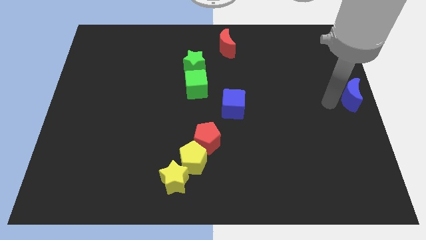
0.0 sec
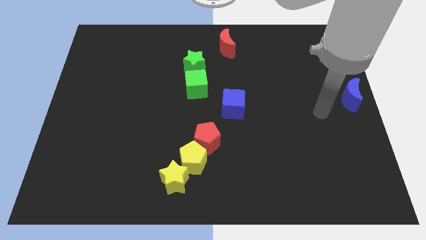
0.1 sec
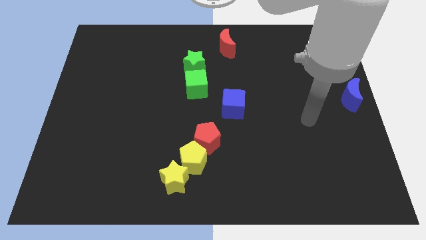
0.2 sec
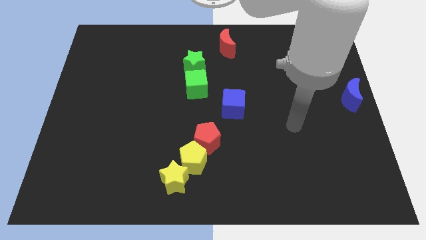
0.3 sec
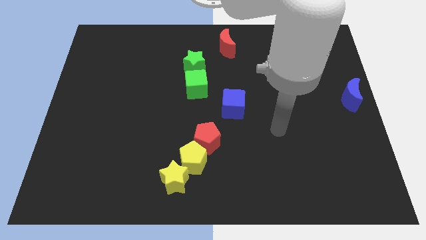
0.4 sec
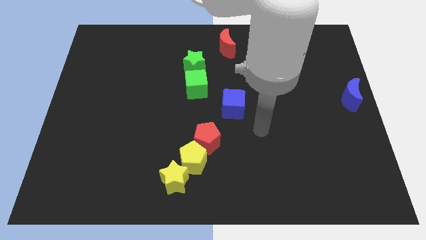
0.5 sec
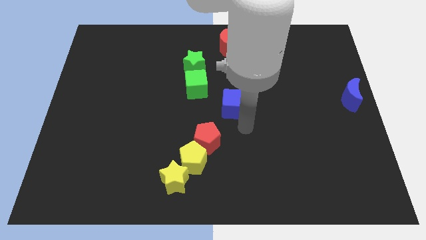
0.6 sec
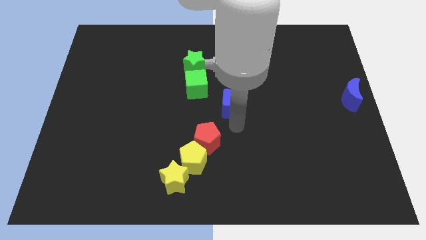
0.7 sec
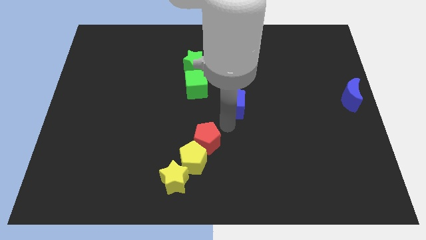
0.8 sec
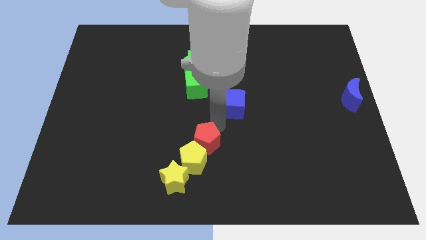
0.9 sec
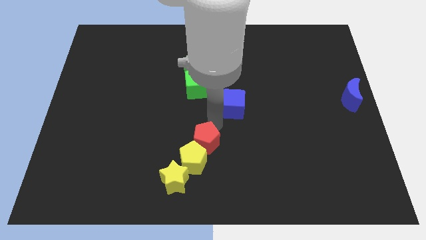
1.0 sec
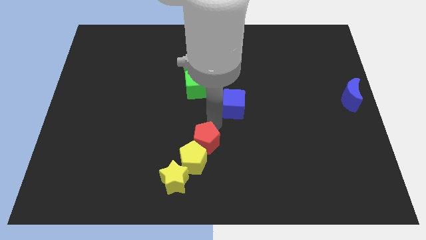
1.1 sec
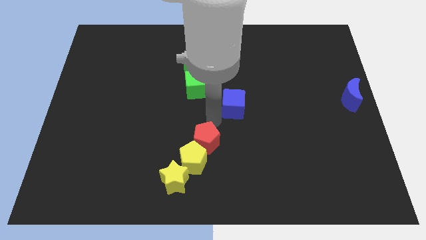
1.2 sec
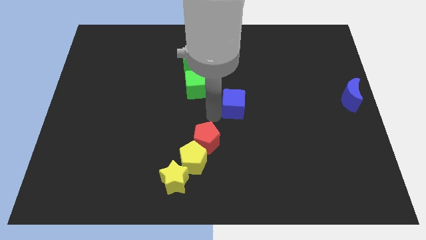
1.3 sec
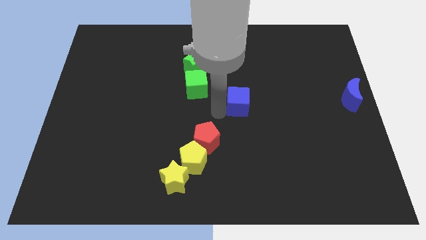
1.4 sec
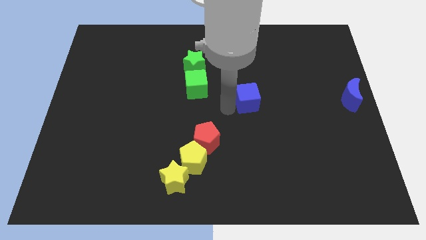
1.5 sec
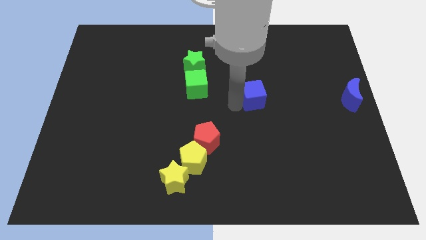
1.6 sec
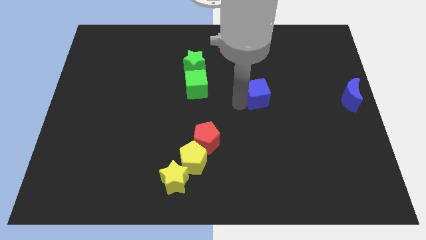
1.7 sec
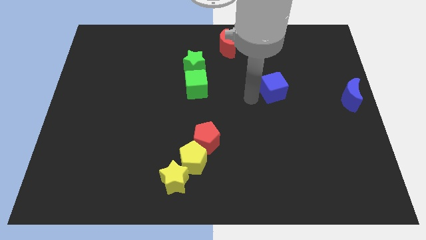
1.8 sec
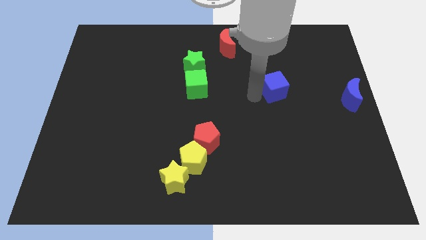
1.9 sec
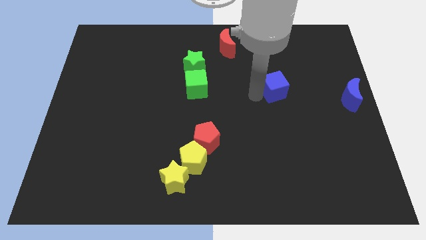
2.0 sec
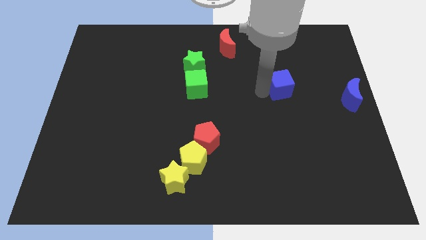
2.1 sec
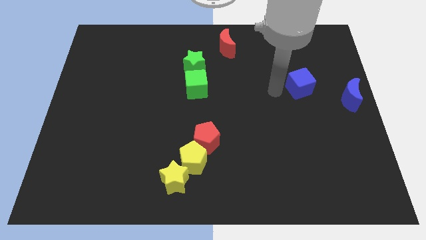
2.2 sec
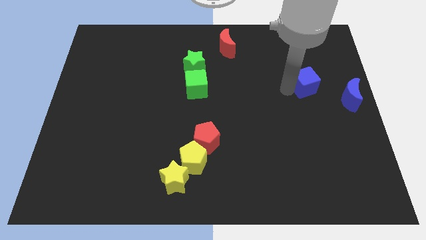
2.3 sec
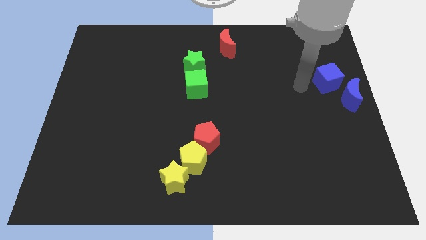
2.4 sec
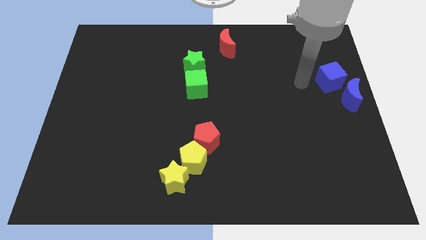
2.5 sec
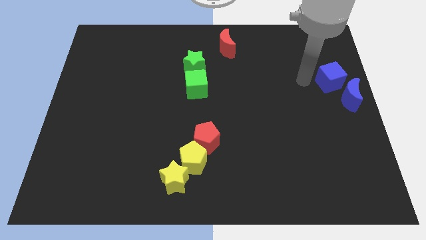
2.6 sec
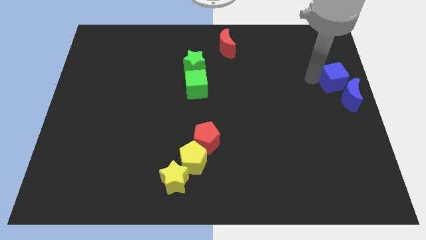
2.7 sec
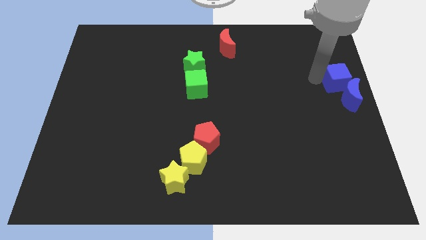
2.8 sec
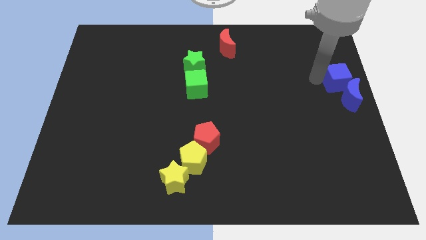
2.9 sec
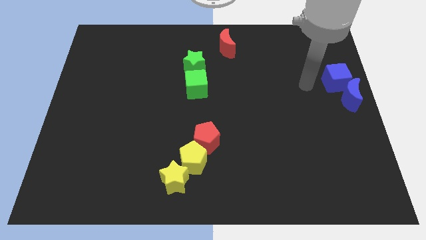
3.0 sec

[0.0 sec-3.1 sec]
place blue cube slightly above the blue crescent

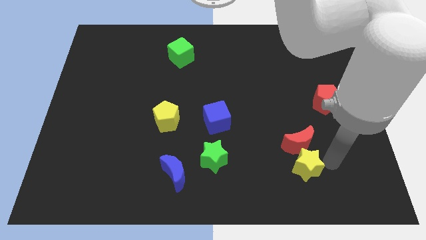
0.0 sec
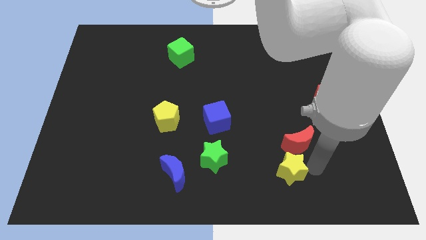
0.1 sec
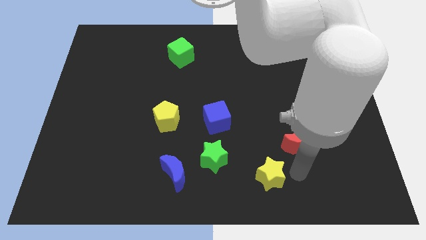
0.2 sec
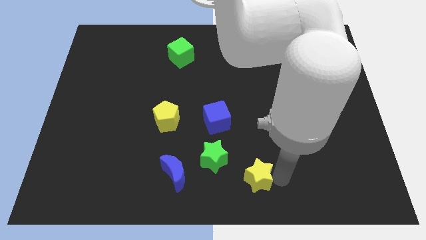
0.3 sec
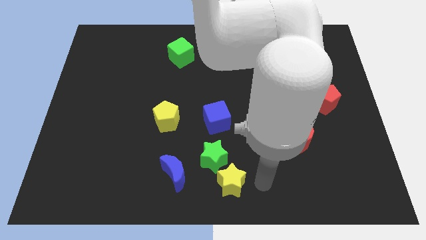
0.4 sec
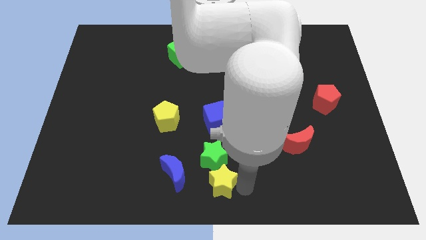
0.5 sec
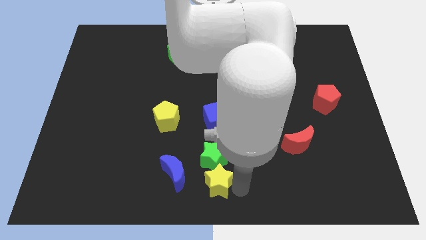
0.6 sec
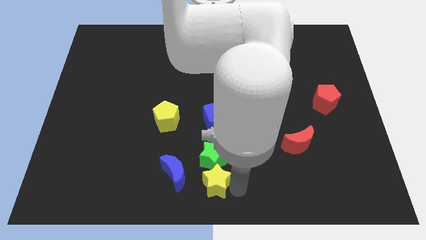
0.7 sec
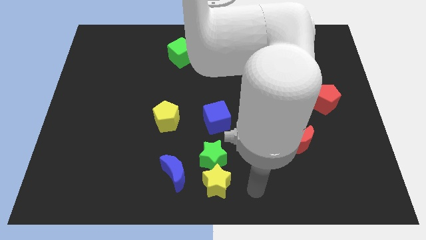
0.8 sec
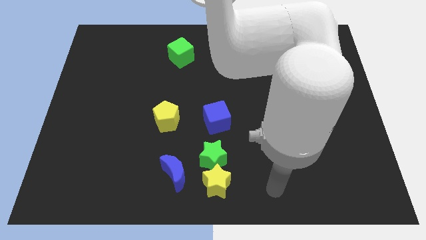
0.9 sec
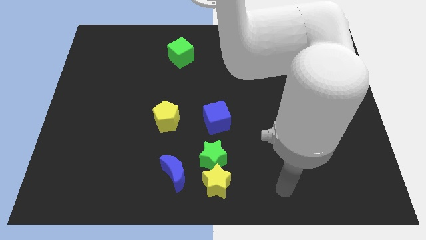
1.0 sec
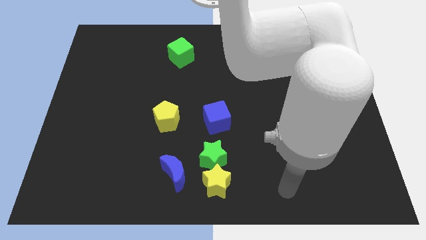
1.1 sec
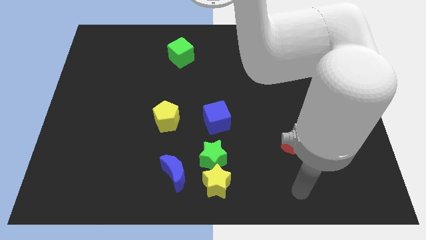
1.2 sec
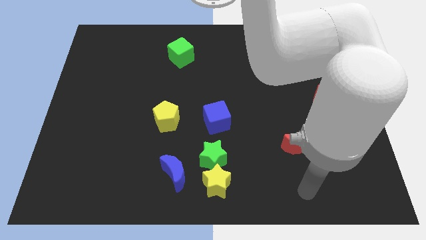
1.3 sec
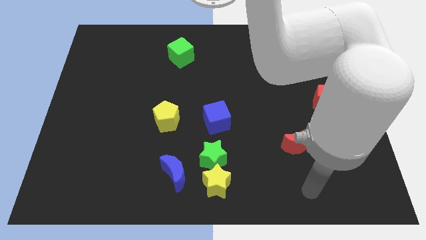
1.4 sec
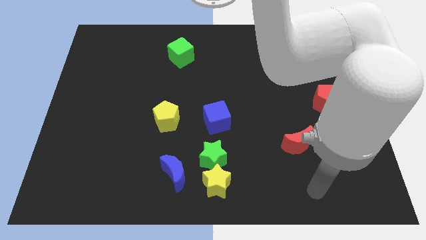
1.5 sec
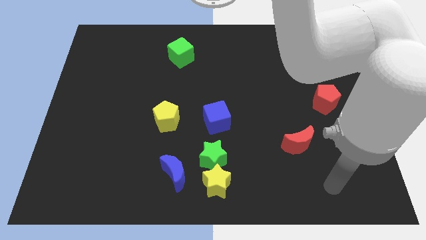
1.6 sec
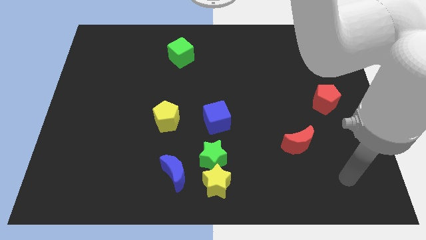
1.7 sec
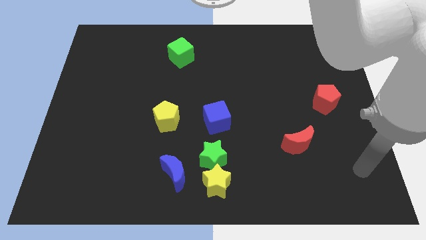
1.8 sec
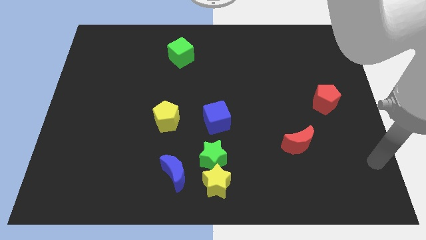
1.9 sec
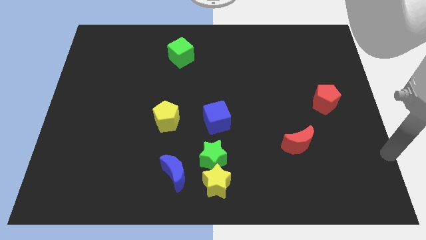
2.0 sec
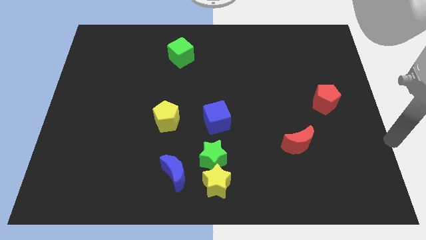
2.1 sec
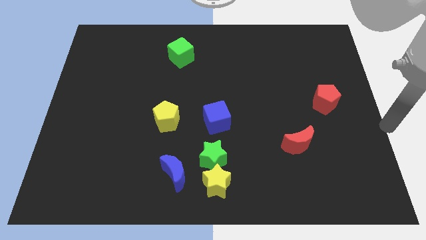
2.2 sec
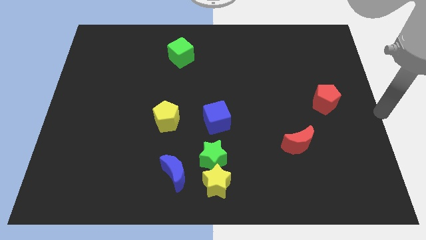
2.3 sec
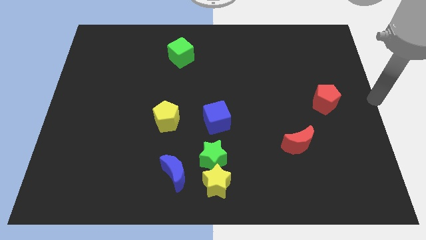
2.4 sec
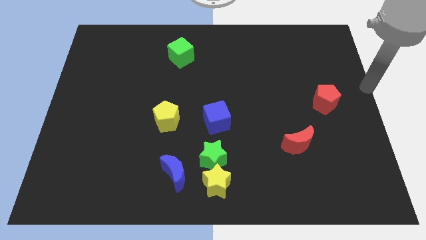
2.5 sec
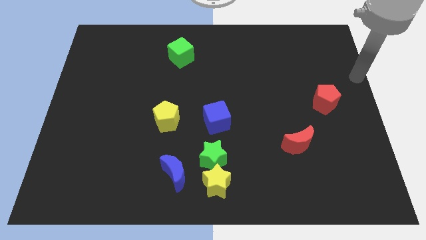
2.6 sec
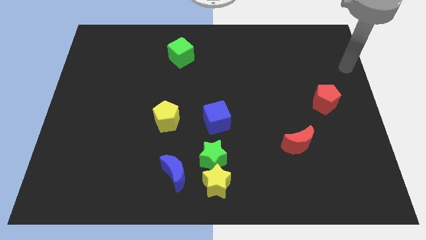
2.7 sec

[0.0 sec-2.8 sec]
move the yellow star underneath the green star

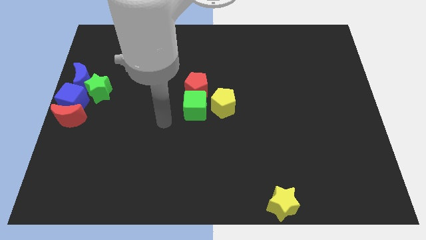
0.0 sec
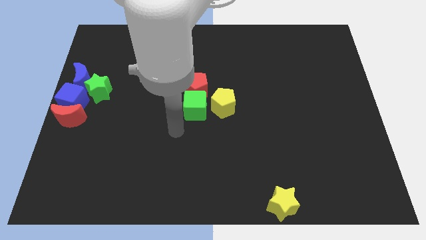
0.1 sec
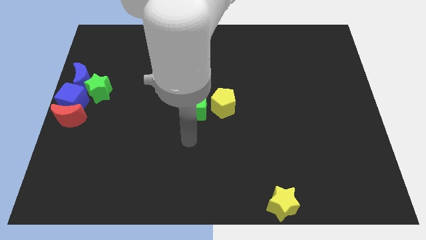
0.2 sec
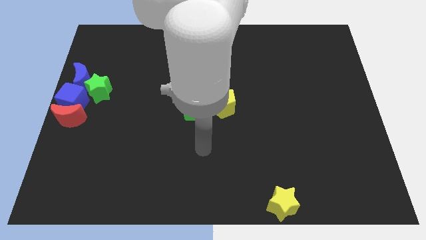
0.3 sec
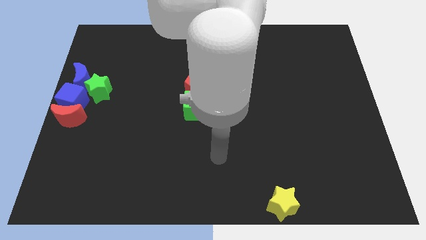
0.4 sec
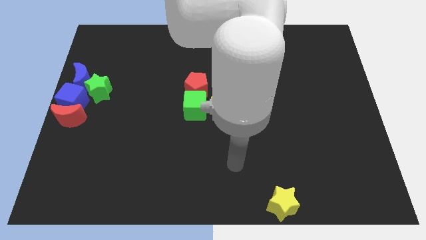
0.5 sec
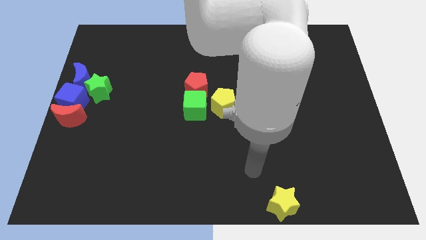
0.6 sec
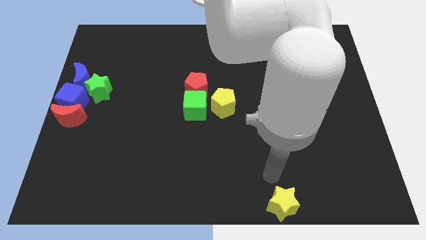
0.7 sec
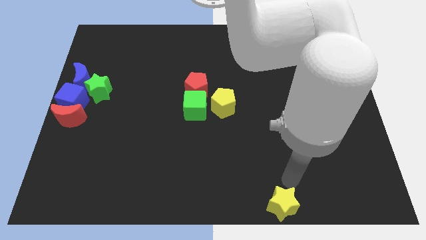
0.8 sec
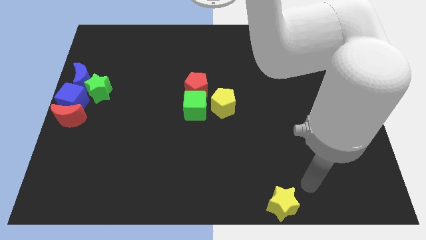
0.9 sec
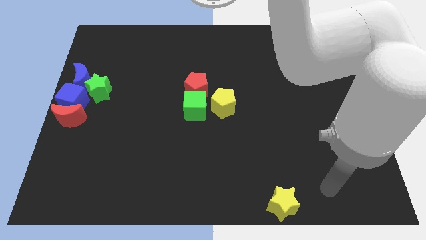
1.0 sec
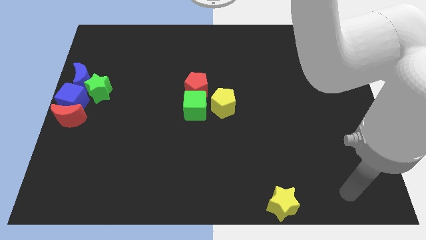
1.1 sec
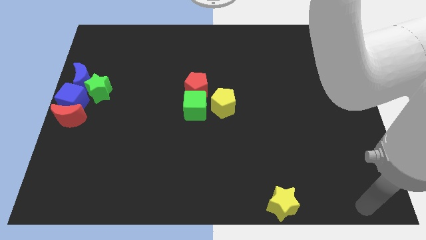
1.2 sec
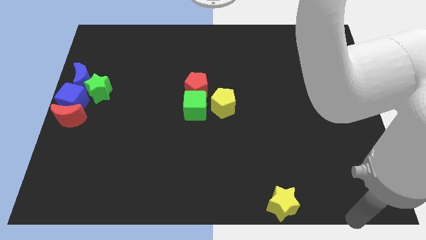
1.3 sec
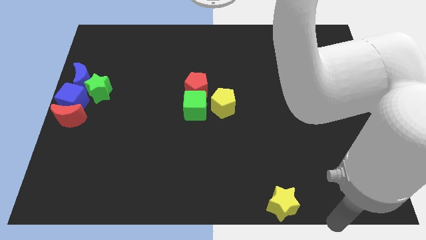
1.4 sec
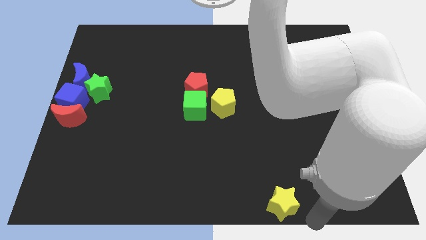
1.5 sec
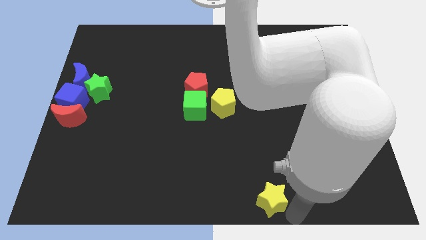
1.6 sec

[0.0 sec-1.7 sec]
move the arm to the right of the yellow star

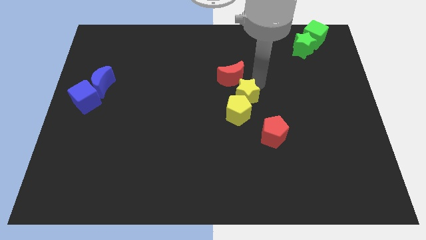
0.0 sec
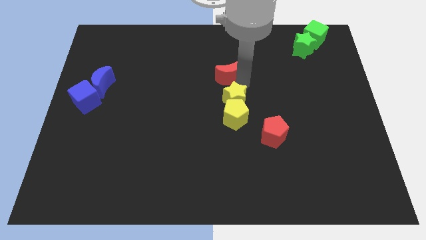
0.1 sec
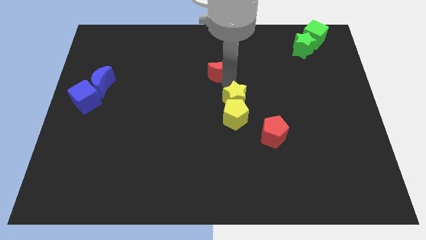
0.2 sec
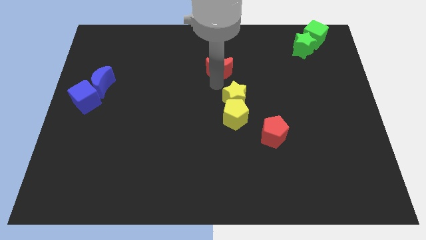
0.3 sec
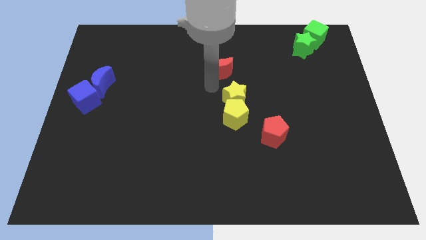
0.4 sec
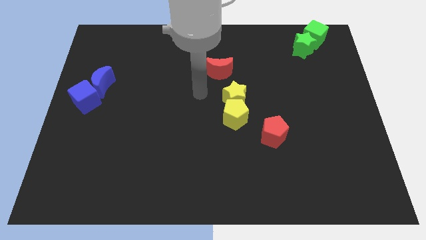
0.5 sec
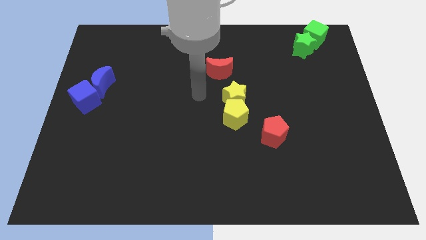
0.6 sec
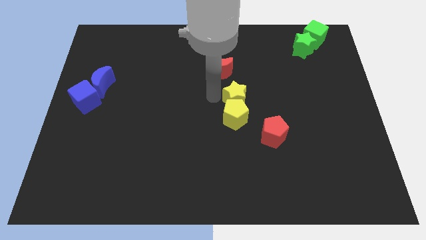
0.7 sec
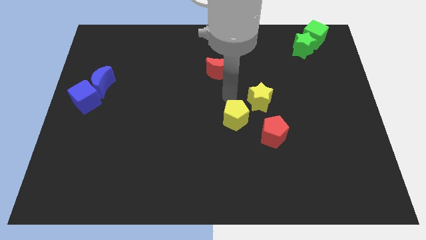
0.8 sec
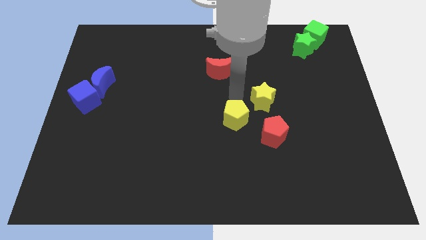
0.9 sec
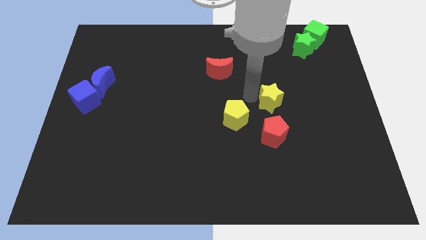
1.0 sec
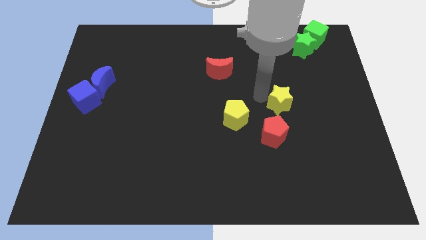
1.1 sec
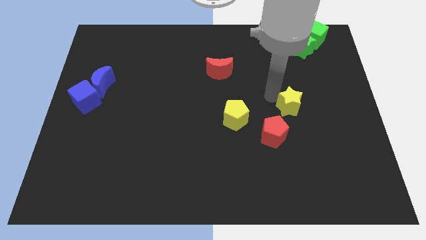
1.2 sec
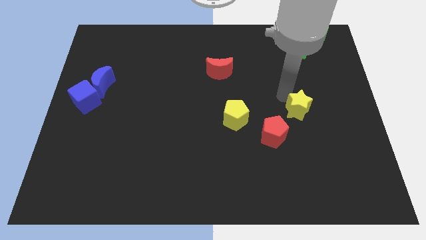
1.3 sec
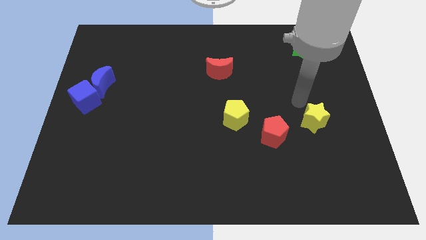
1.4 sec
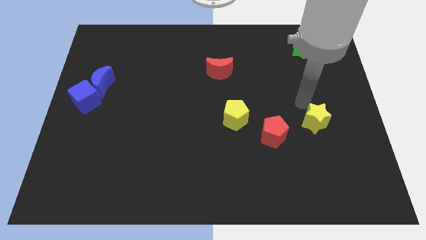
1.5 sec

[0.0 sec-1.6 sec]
push the yellow star towards the right side of the red pentagon
